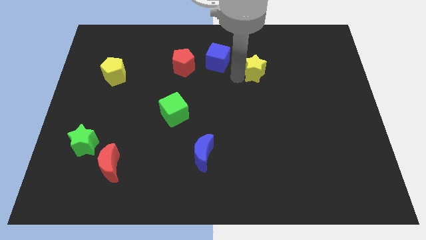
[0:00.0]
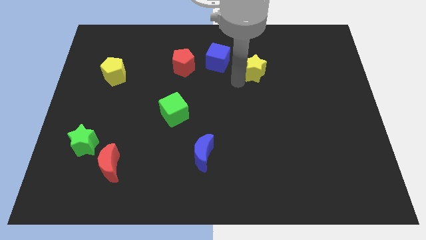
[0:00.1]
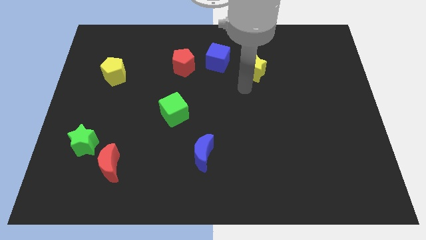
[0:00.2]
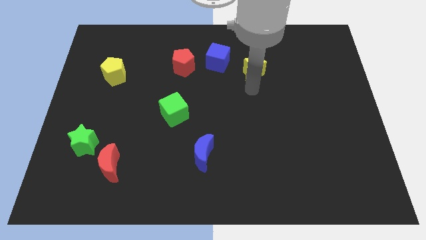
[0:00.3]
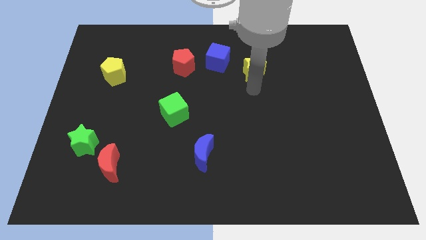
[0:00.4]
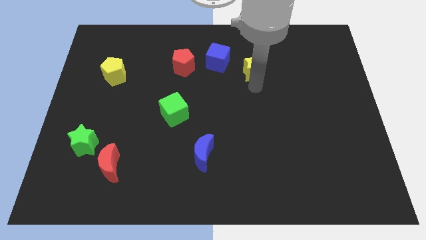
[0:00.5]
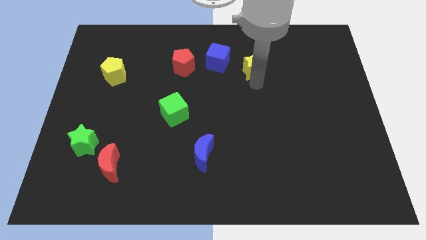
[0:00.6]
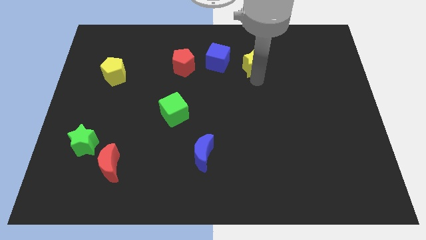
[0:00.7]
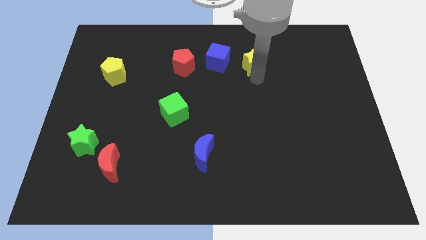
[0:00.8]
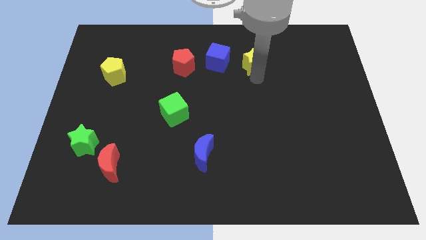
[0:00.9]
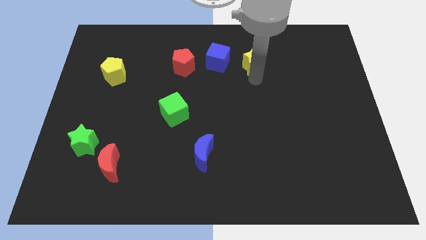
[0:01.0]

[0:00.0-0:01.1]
move yellow star slightly upwards

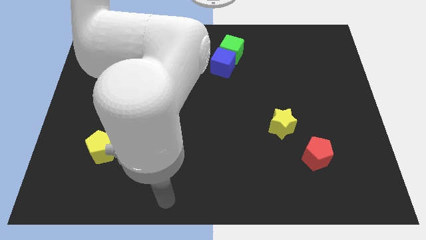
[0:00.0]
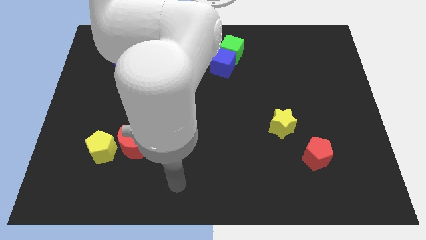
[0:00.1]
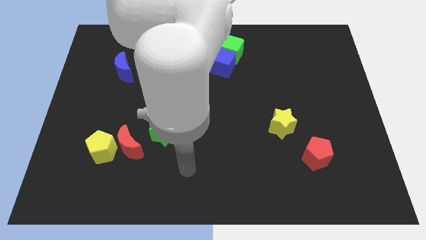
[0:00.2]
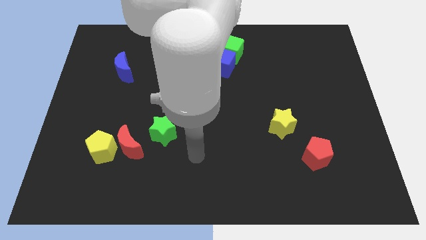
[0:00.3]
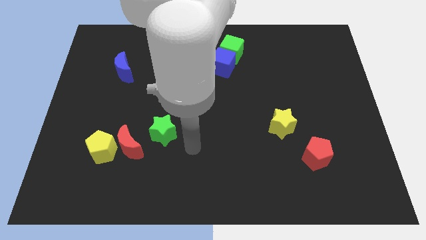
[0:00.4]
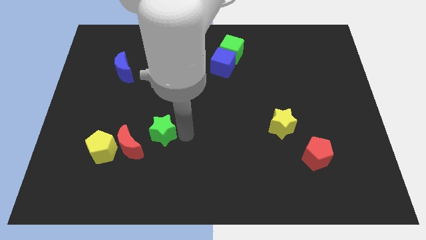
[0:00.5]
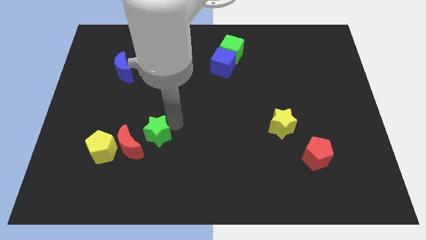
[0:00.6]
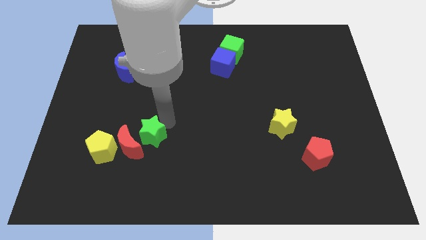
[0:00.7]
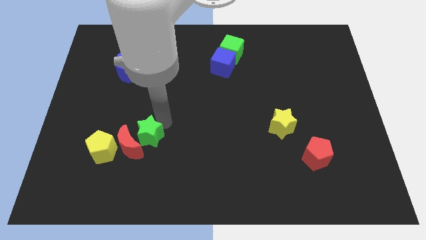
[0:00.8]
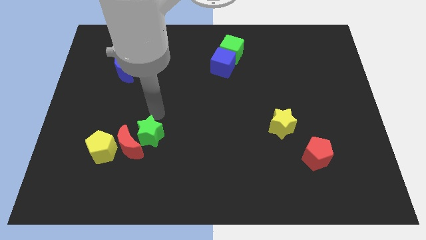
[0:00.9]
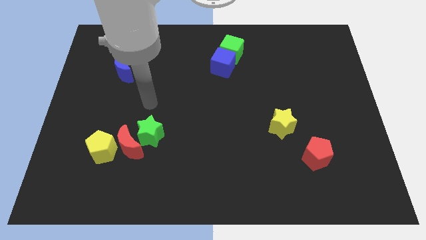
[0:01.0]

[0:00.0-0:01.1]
move the green star close to the red crescent

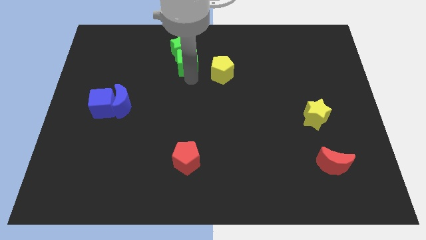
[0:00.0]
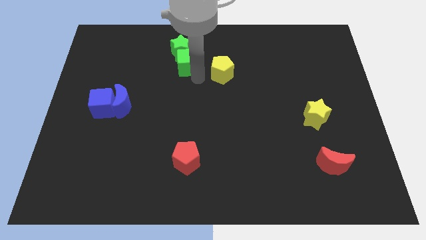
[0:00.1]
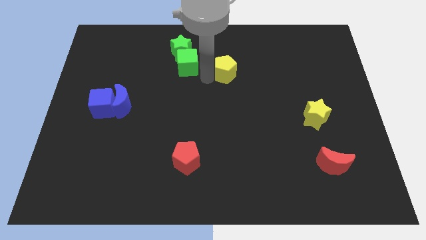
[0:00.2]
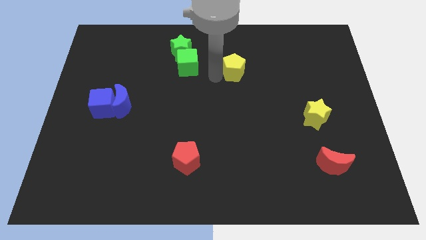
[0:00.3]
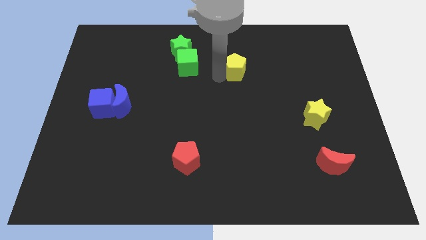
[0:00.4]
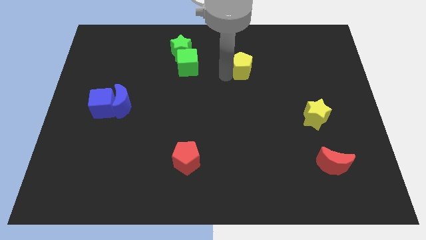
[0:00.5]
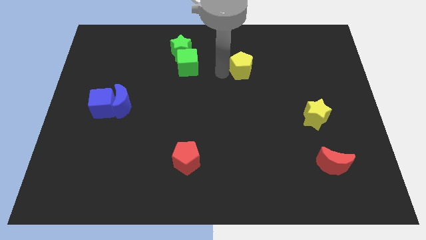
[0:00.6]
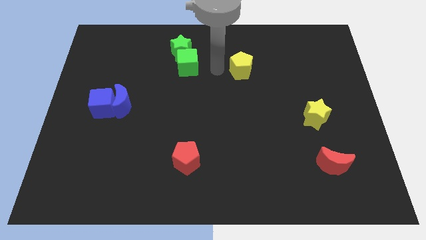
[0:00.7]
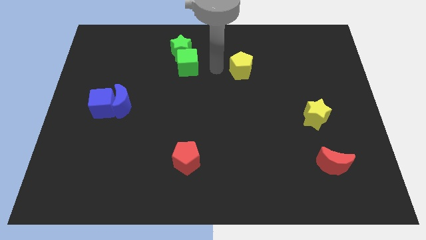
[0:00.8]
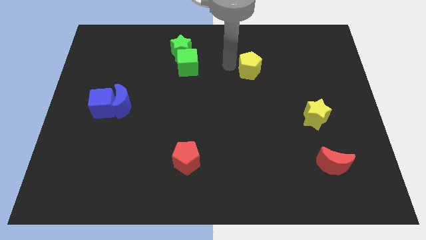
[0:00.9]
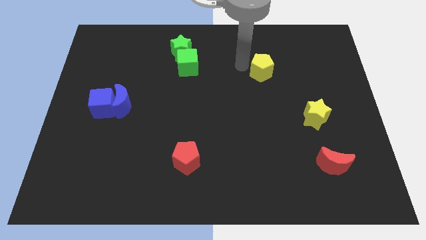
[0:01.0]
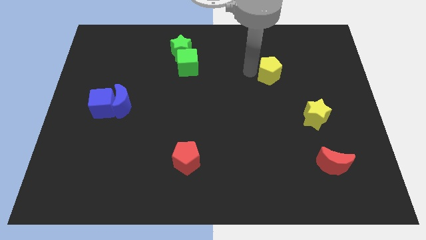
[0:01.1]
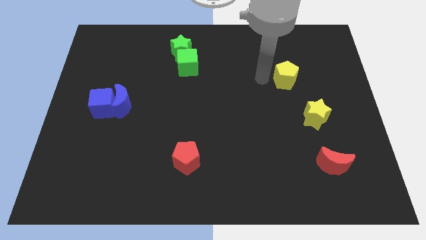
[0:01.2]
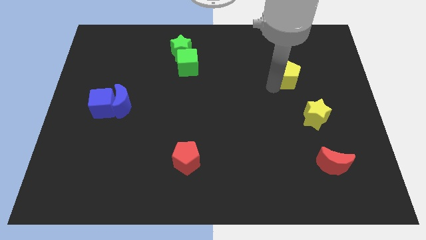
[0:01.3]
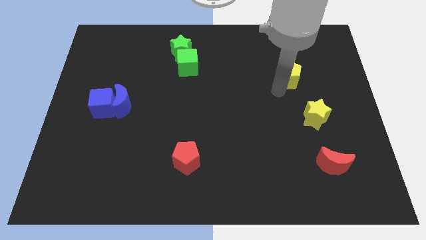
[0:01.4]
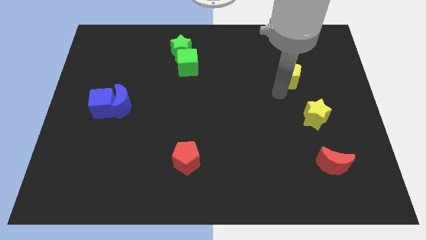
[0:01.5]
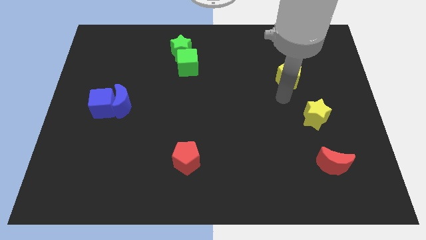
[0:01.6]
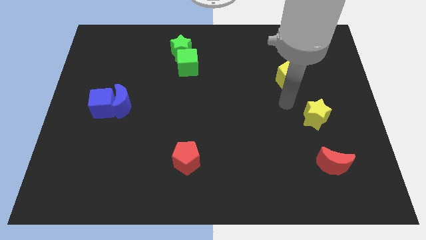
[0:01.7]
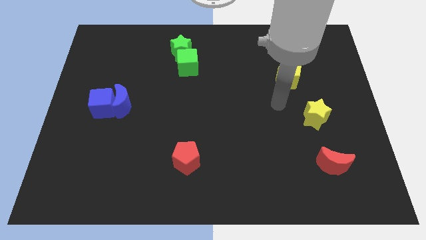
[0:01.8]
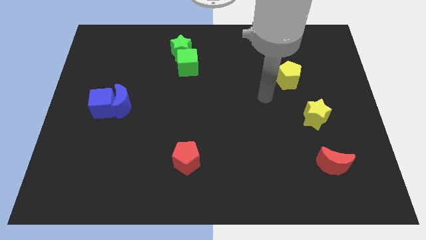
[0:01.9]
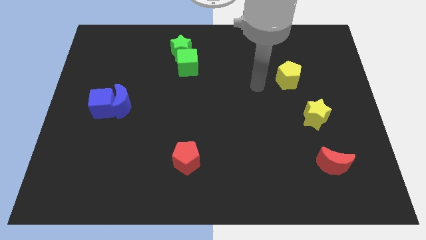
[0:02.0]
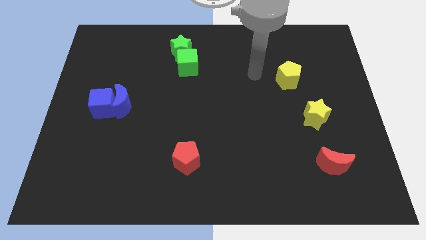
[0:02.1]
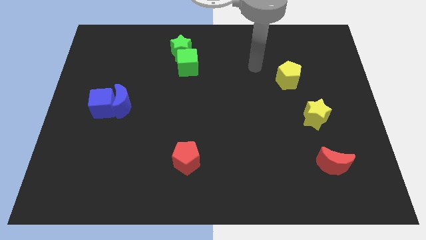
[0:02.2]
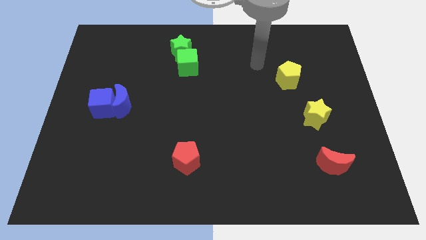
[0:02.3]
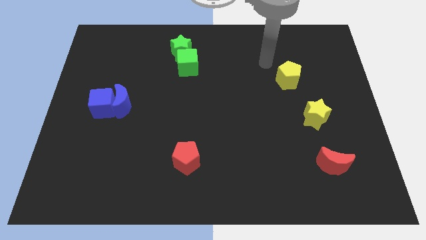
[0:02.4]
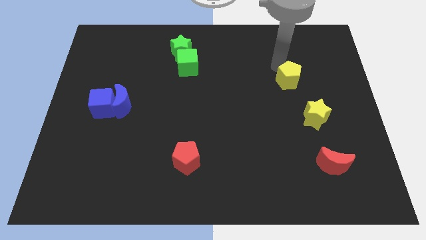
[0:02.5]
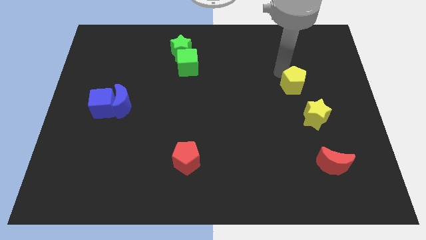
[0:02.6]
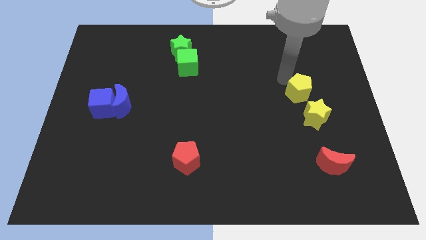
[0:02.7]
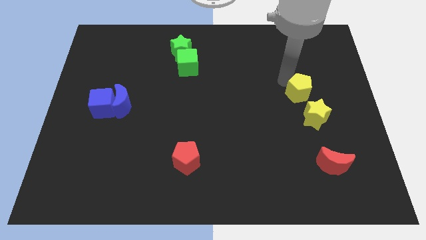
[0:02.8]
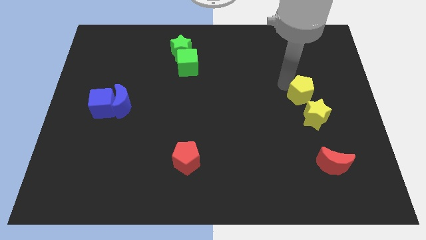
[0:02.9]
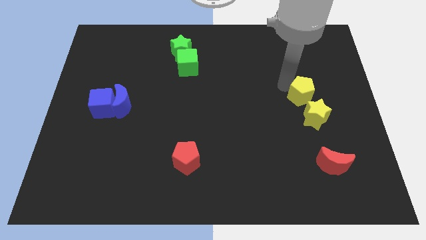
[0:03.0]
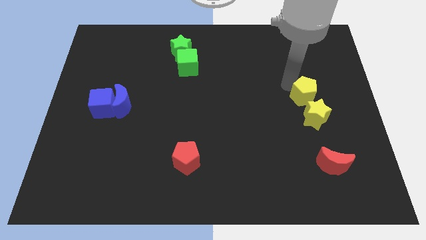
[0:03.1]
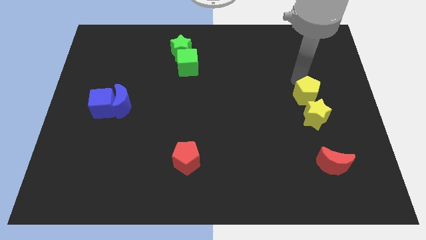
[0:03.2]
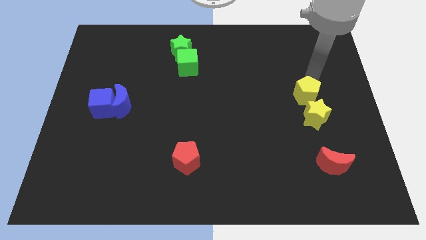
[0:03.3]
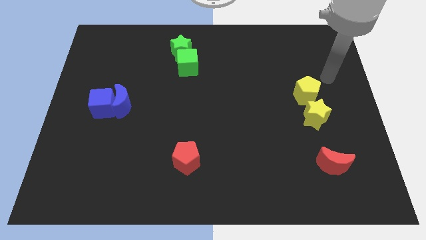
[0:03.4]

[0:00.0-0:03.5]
place the yellow pentagon above the yellow star

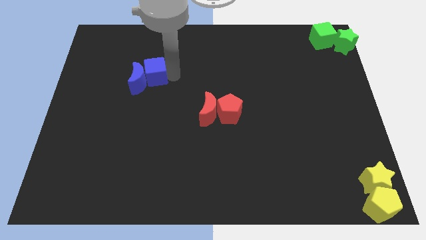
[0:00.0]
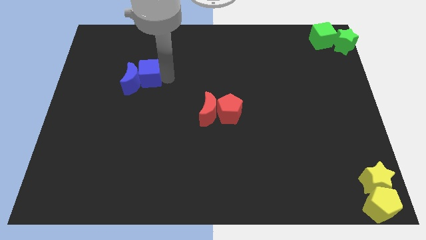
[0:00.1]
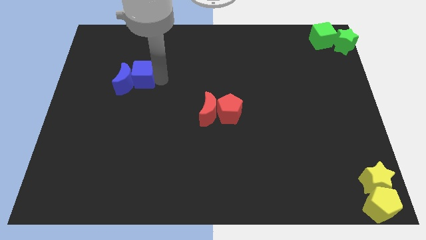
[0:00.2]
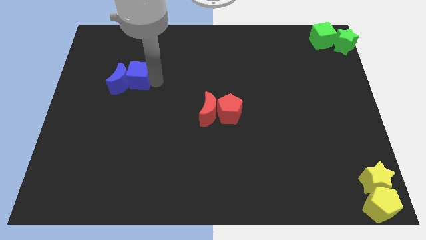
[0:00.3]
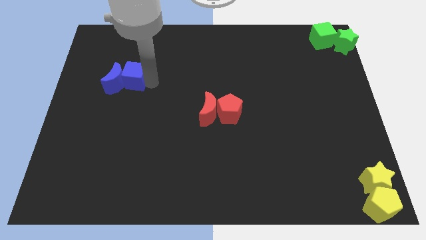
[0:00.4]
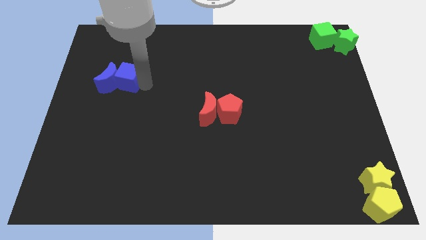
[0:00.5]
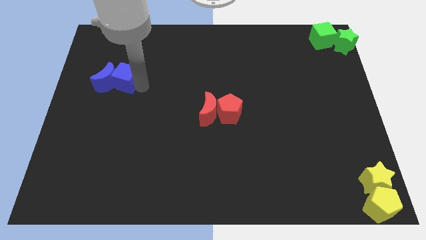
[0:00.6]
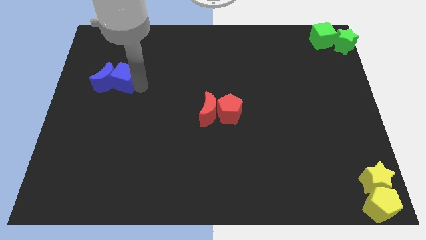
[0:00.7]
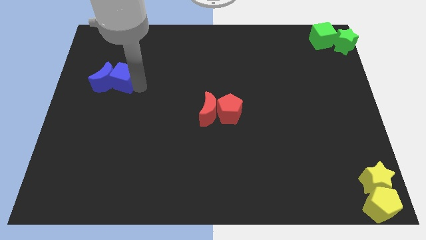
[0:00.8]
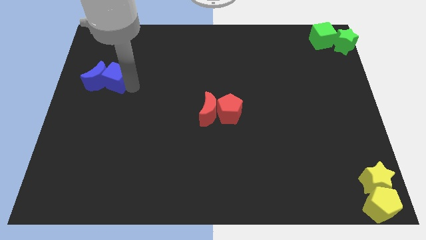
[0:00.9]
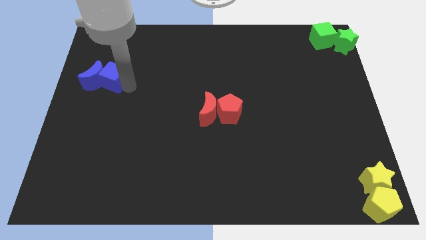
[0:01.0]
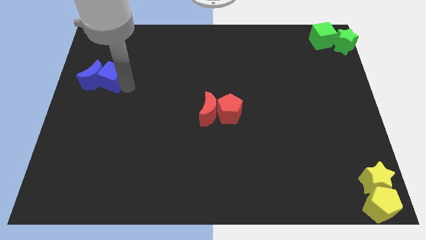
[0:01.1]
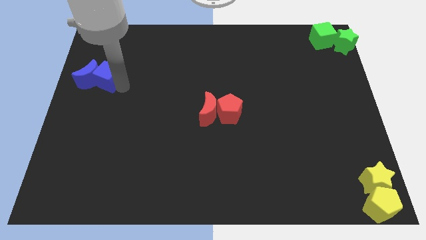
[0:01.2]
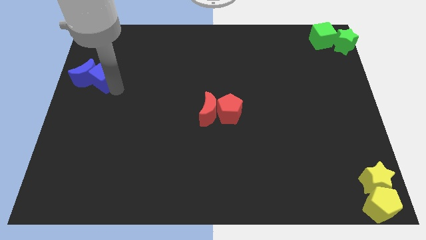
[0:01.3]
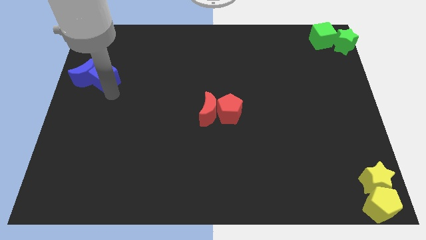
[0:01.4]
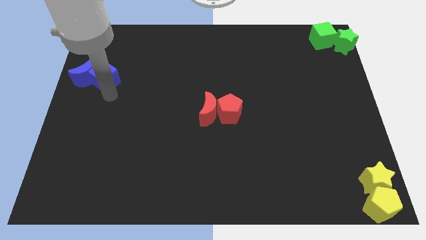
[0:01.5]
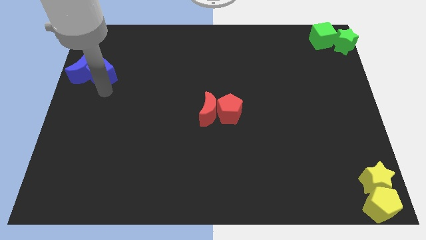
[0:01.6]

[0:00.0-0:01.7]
push the blue blocks to the left center side of the board

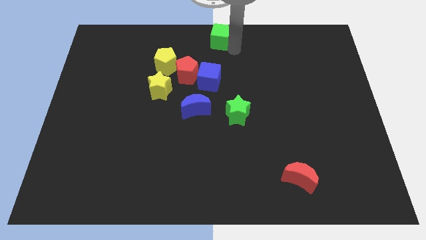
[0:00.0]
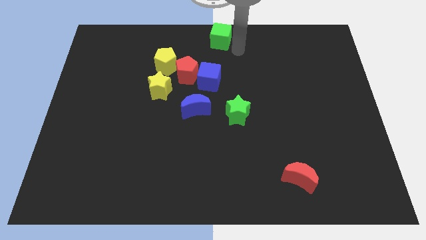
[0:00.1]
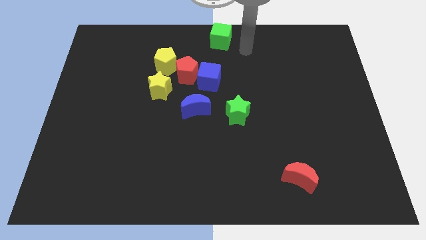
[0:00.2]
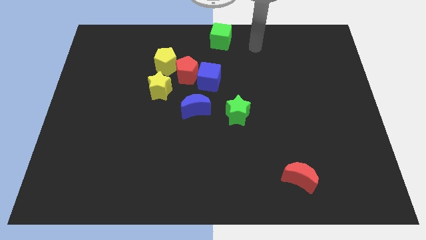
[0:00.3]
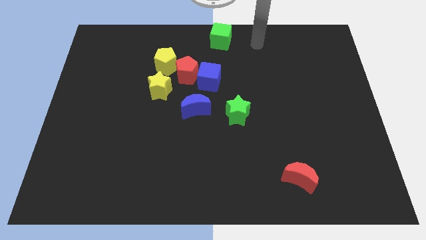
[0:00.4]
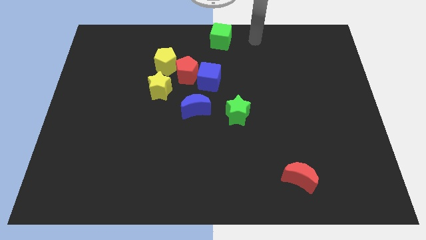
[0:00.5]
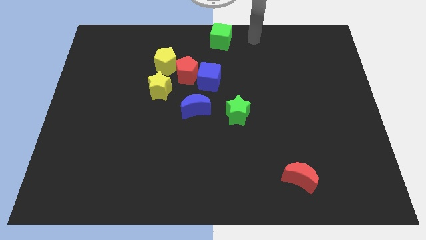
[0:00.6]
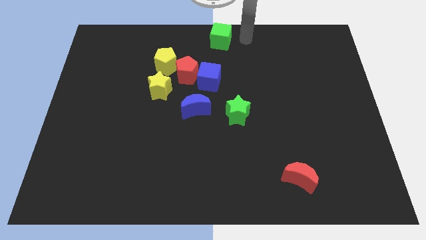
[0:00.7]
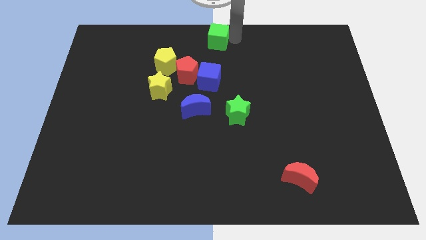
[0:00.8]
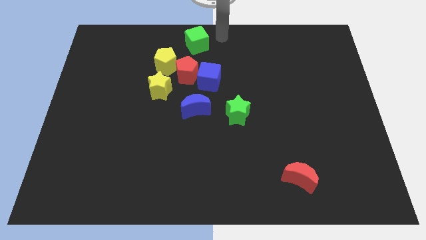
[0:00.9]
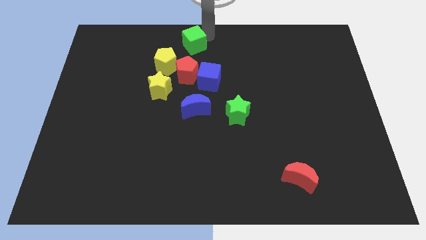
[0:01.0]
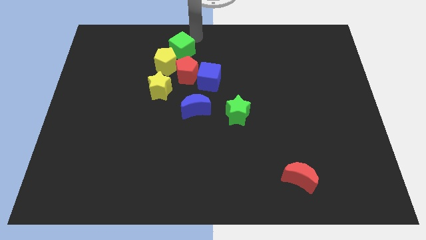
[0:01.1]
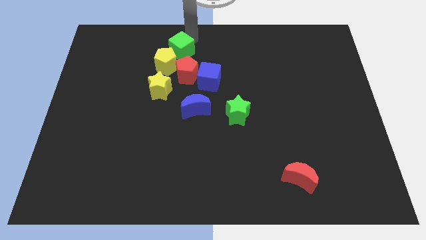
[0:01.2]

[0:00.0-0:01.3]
put the green cube at the top of yellow pentagon

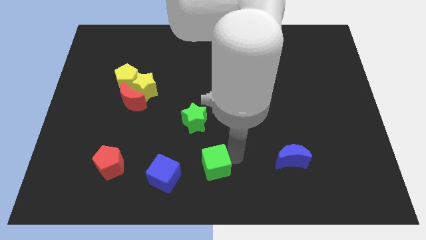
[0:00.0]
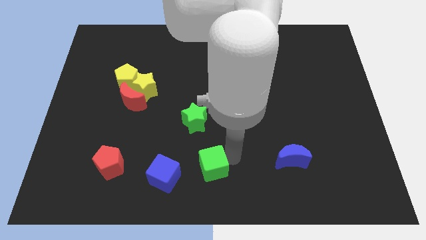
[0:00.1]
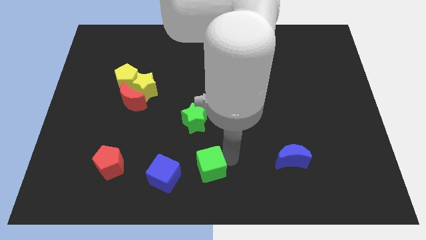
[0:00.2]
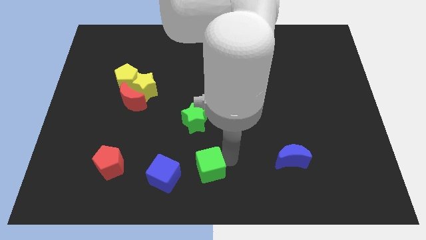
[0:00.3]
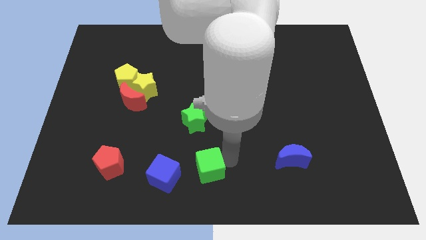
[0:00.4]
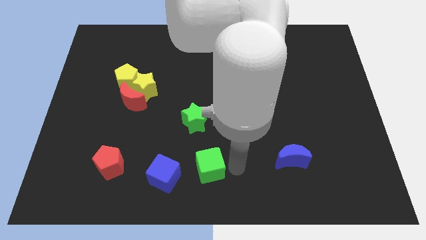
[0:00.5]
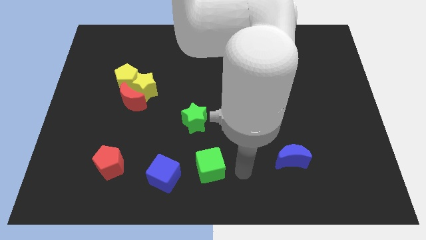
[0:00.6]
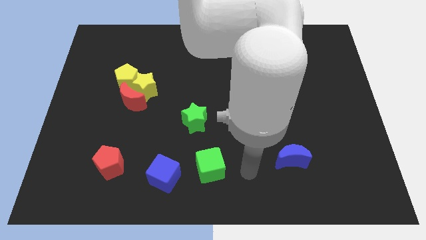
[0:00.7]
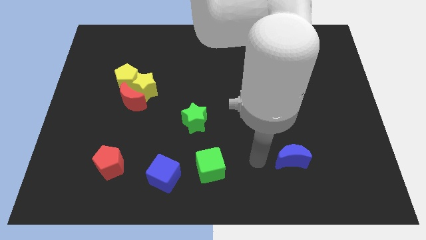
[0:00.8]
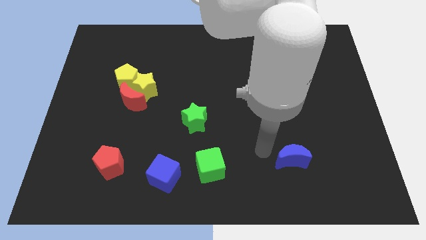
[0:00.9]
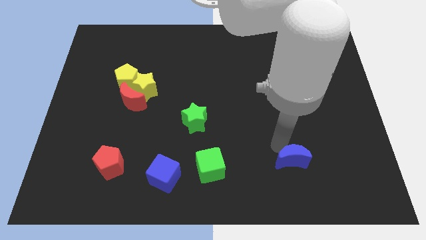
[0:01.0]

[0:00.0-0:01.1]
push green cube towards blue cube
